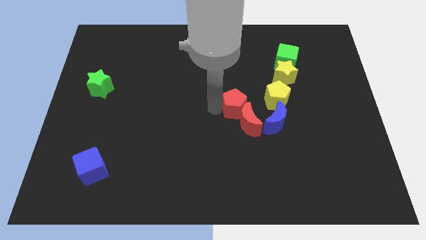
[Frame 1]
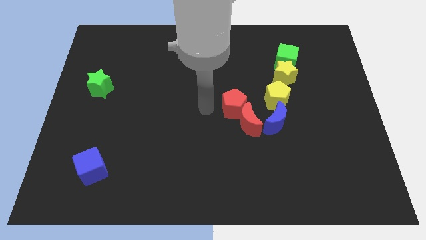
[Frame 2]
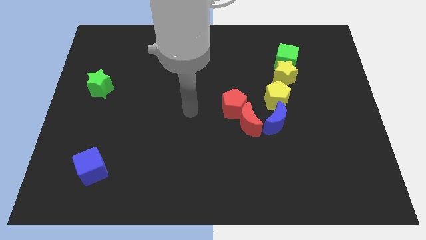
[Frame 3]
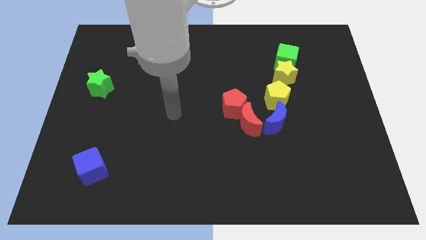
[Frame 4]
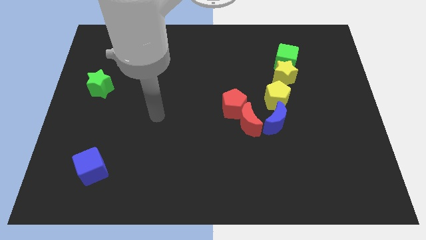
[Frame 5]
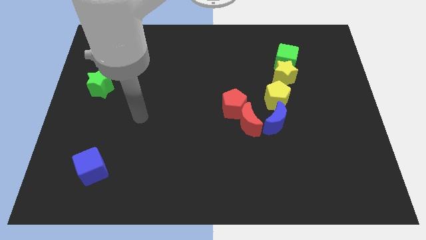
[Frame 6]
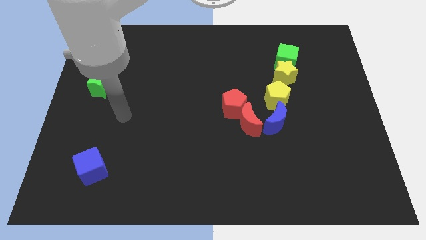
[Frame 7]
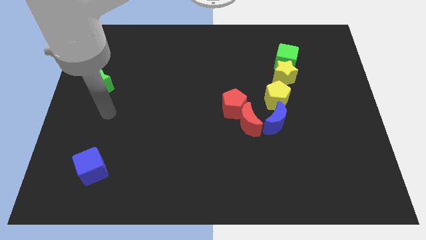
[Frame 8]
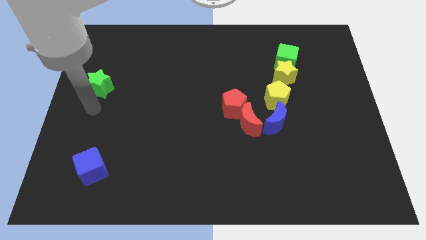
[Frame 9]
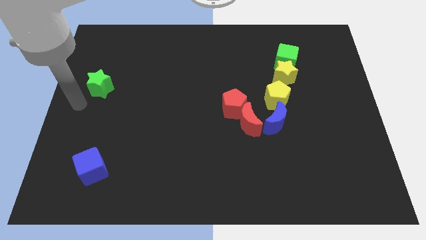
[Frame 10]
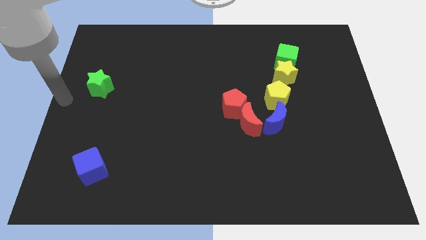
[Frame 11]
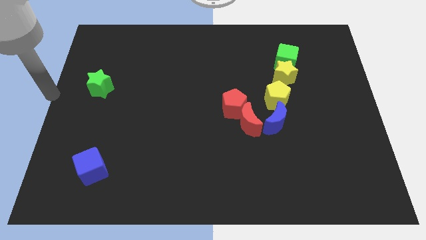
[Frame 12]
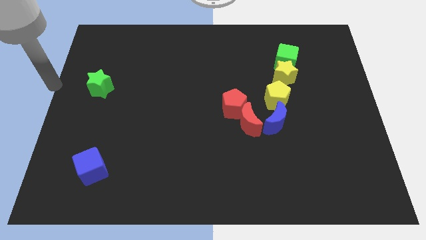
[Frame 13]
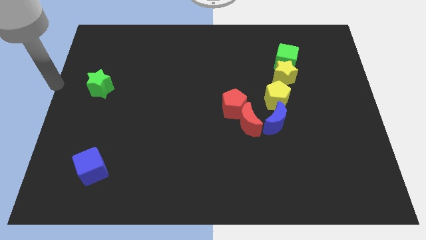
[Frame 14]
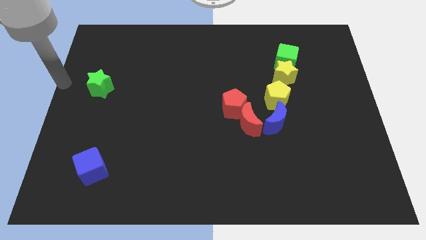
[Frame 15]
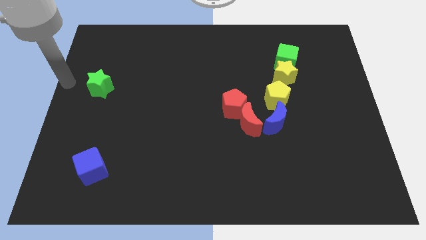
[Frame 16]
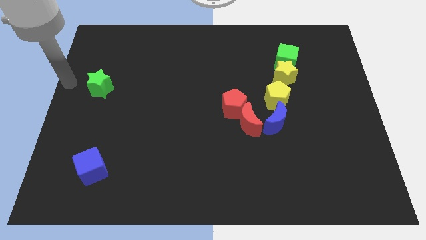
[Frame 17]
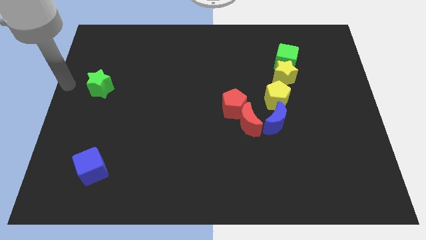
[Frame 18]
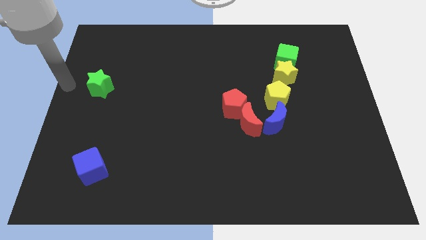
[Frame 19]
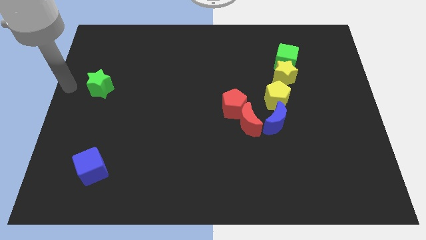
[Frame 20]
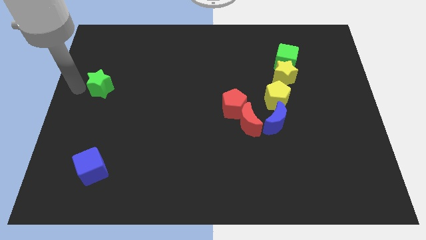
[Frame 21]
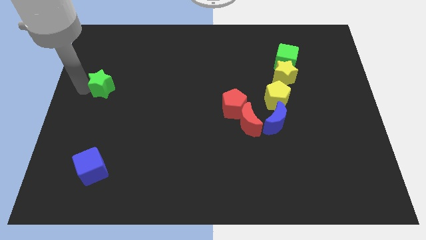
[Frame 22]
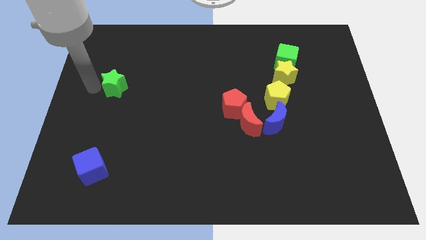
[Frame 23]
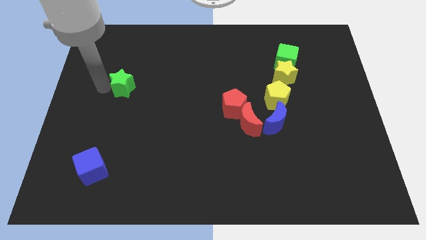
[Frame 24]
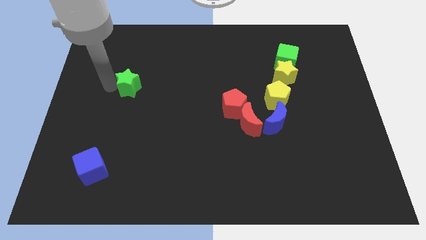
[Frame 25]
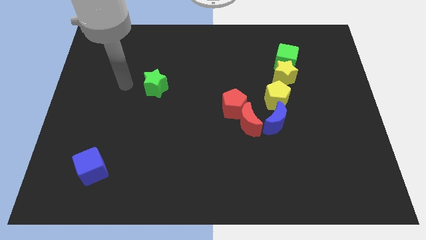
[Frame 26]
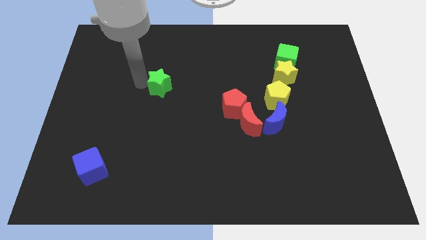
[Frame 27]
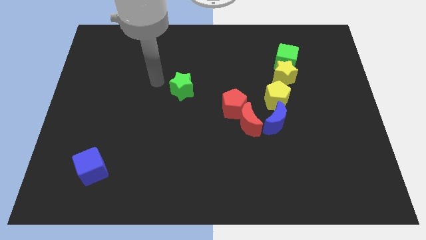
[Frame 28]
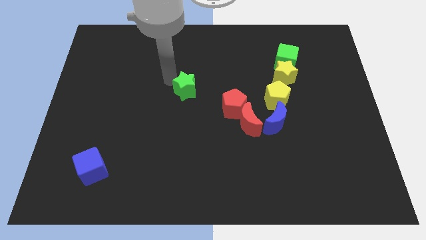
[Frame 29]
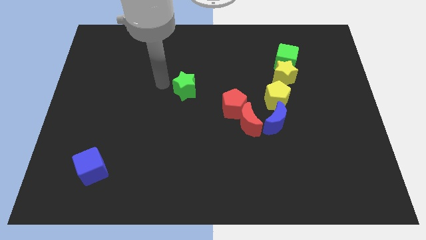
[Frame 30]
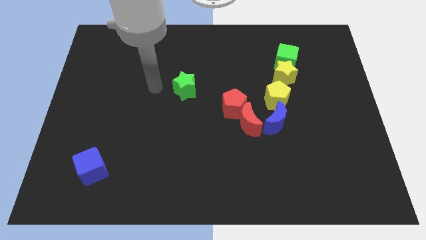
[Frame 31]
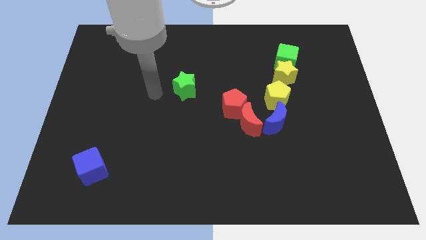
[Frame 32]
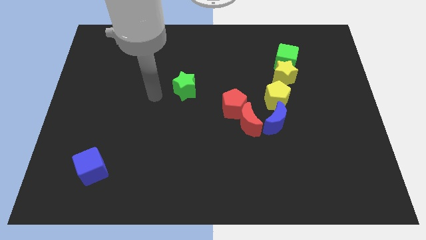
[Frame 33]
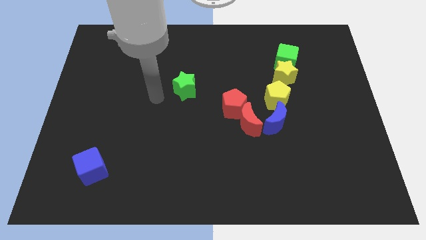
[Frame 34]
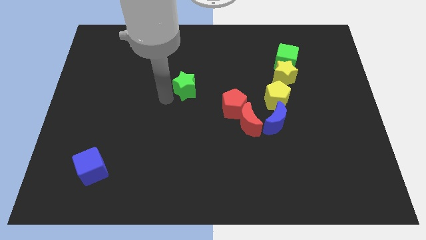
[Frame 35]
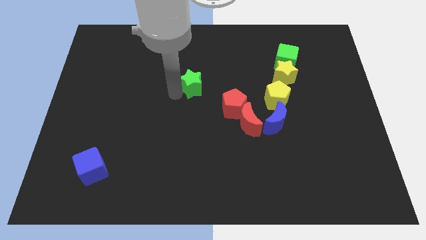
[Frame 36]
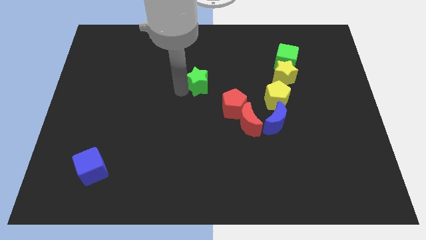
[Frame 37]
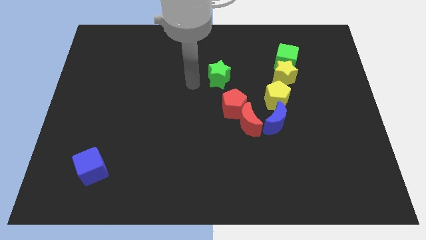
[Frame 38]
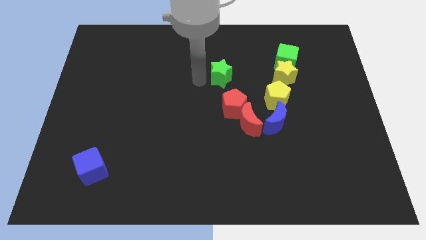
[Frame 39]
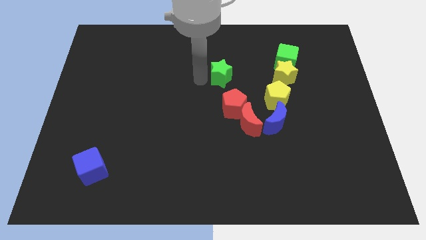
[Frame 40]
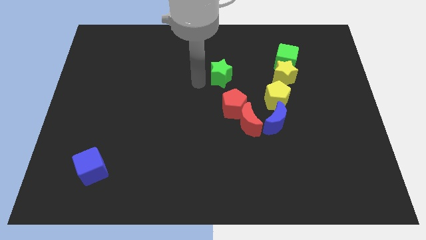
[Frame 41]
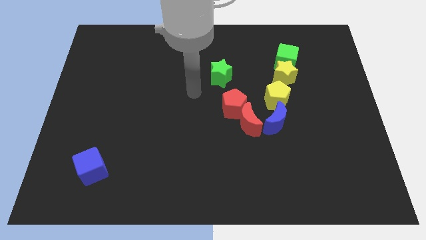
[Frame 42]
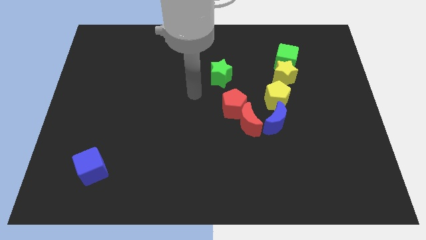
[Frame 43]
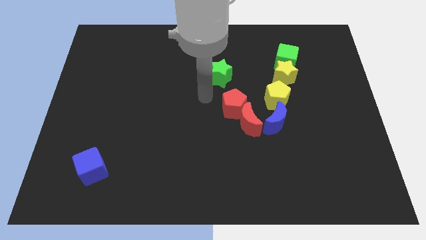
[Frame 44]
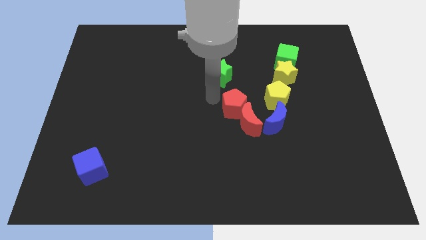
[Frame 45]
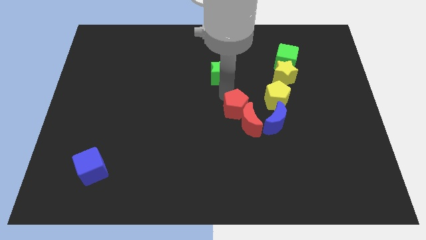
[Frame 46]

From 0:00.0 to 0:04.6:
push the green star to the right

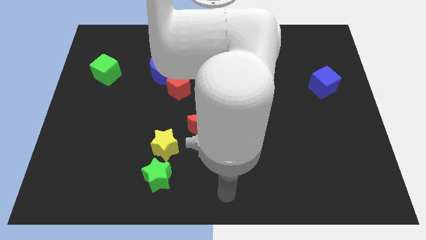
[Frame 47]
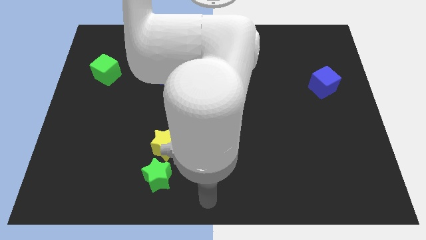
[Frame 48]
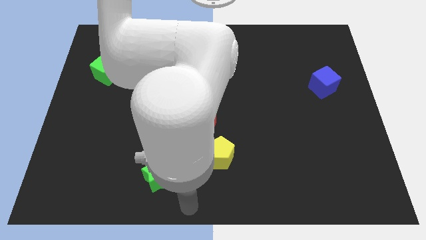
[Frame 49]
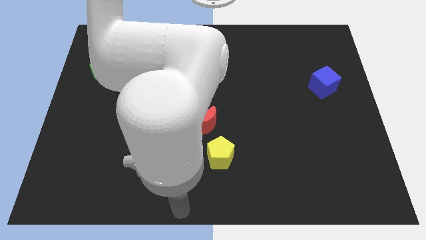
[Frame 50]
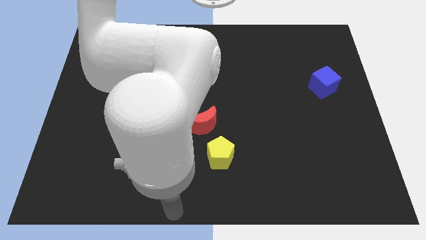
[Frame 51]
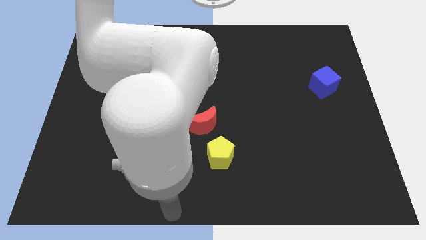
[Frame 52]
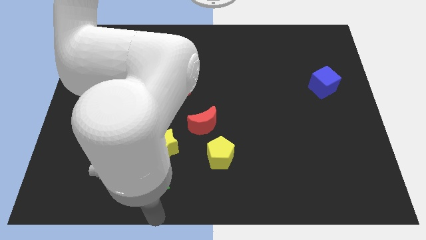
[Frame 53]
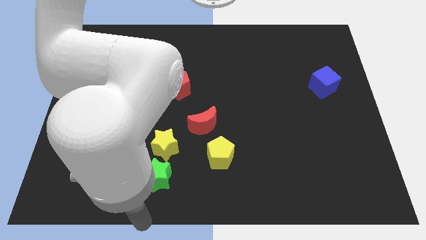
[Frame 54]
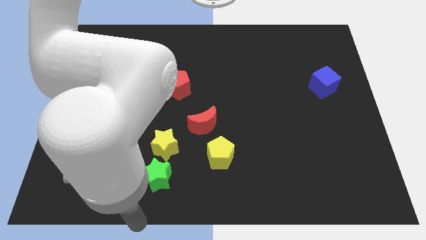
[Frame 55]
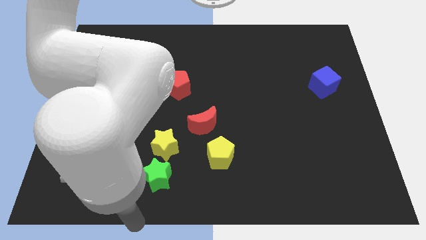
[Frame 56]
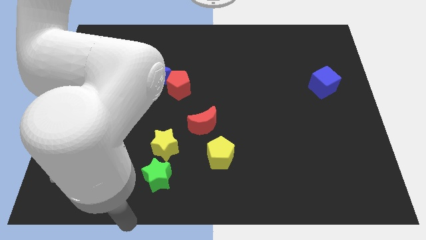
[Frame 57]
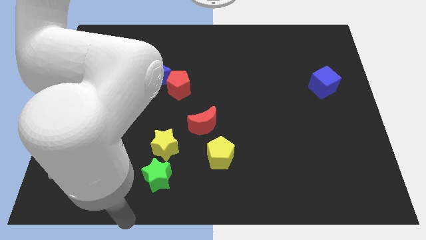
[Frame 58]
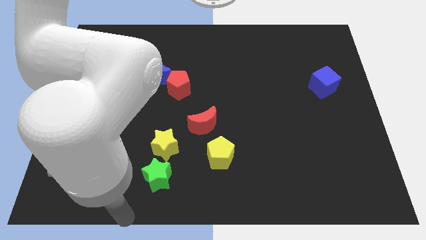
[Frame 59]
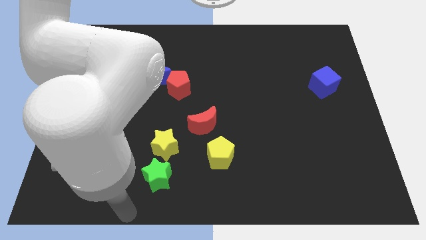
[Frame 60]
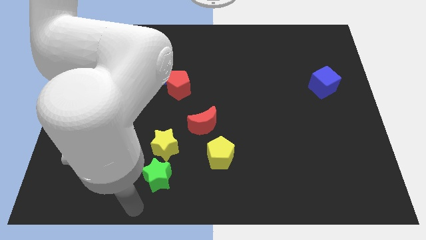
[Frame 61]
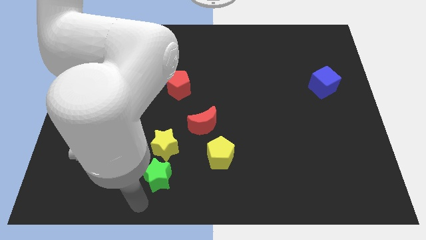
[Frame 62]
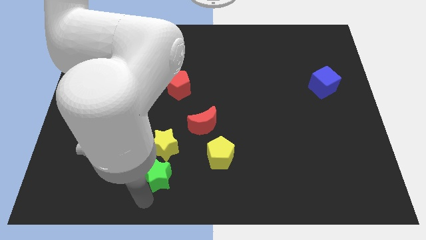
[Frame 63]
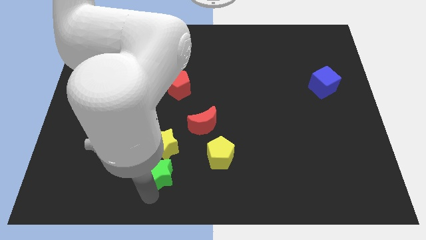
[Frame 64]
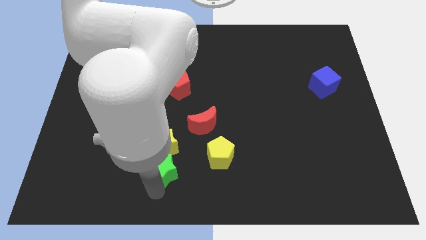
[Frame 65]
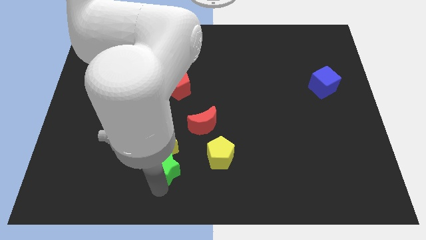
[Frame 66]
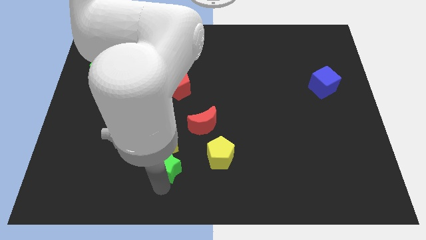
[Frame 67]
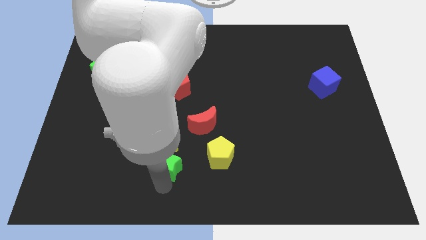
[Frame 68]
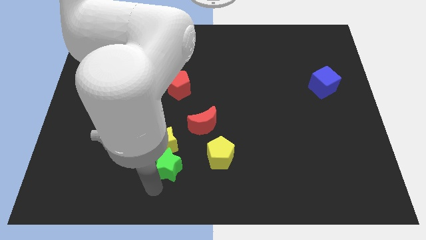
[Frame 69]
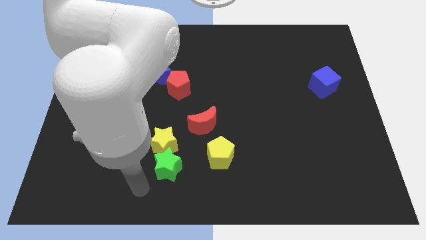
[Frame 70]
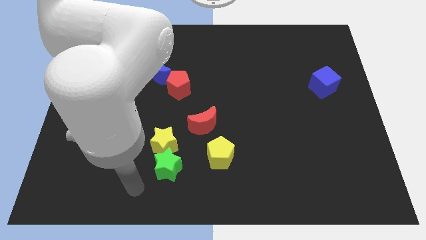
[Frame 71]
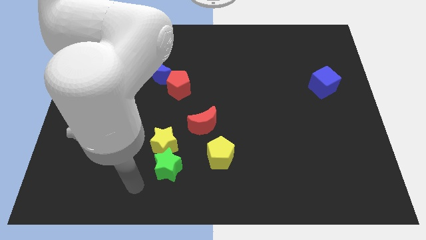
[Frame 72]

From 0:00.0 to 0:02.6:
move the green star into the yellow star

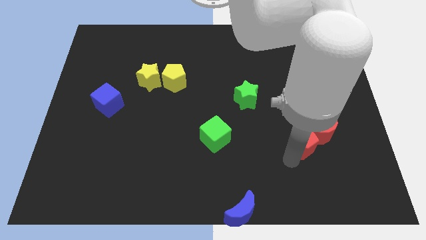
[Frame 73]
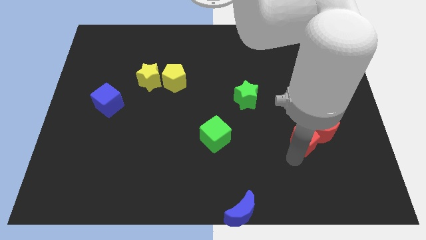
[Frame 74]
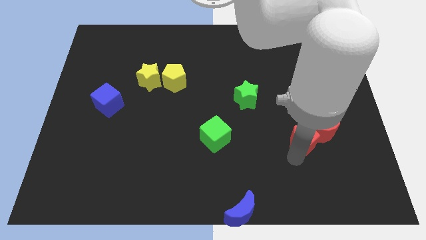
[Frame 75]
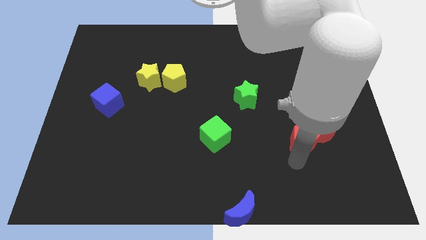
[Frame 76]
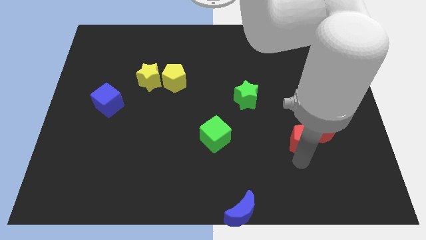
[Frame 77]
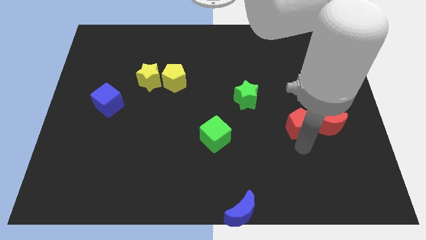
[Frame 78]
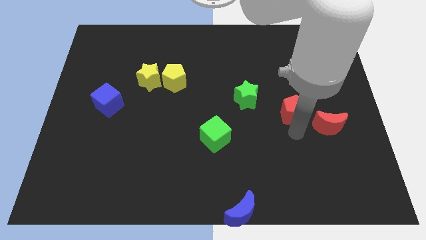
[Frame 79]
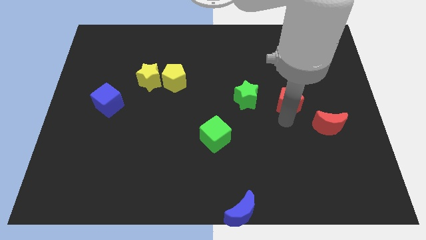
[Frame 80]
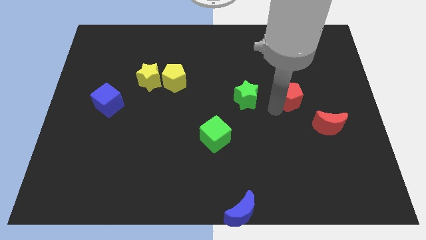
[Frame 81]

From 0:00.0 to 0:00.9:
move red pentagon on right to green star

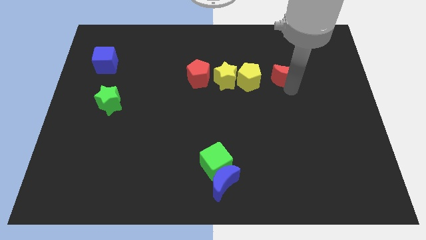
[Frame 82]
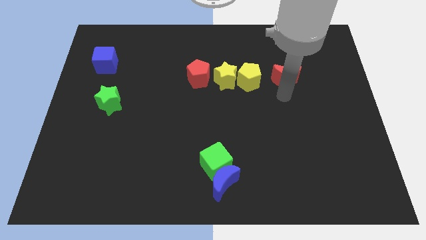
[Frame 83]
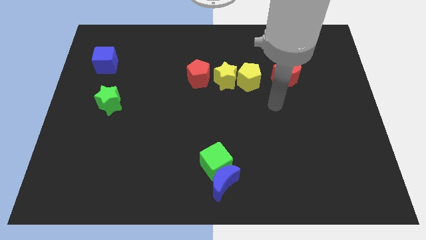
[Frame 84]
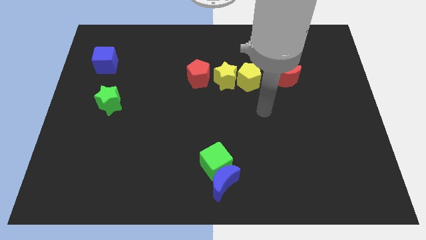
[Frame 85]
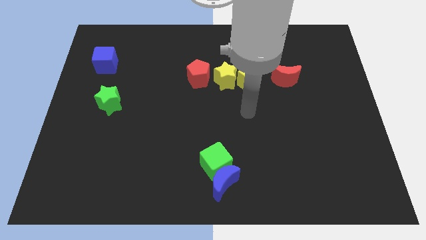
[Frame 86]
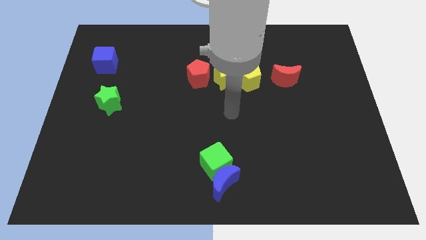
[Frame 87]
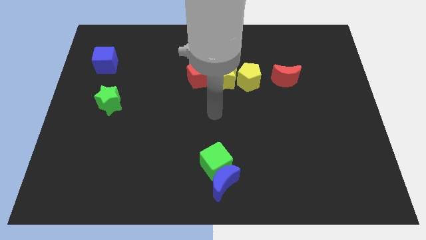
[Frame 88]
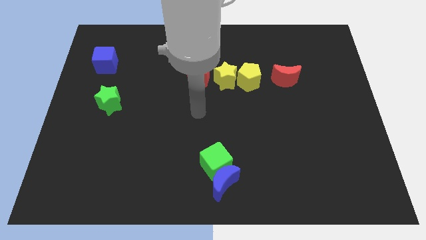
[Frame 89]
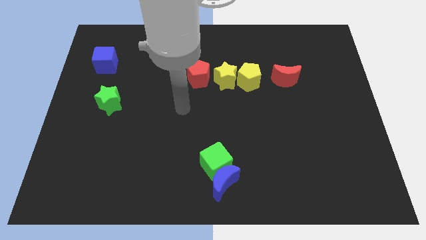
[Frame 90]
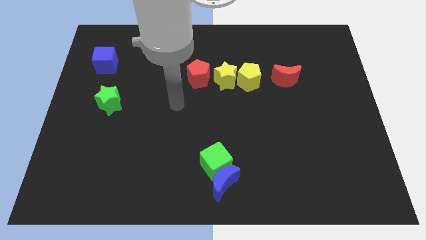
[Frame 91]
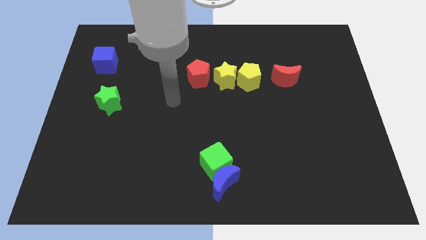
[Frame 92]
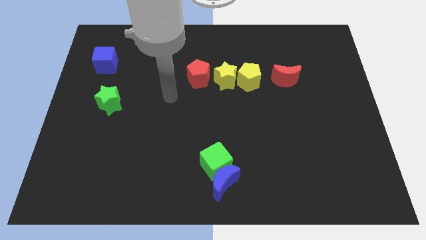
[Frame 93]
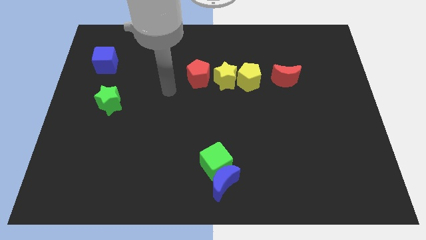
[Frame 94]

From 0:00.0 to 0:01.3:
move your arm away from the red moon
